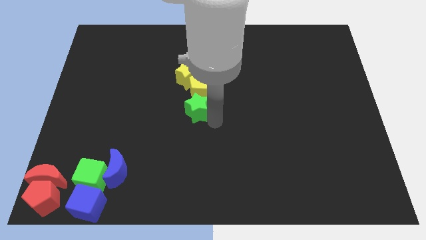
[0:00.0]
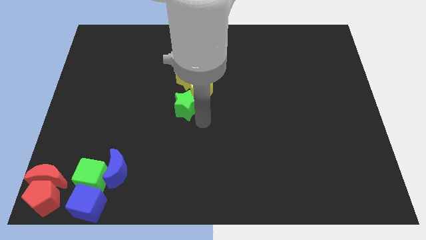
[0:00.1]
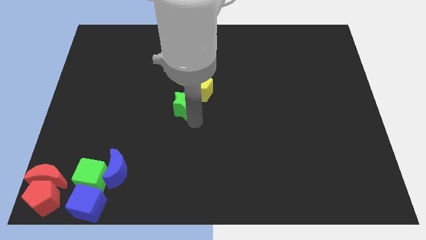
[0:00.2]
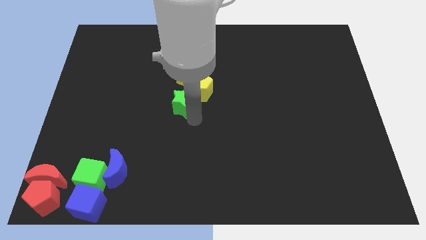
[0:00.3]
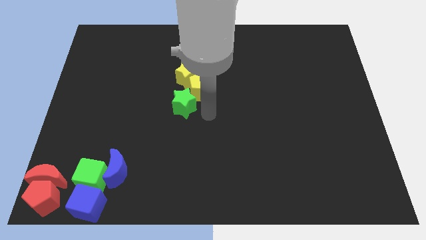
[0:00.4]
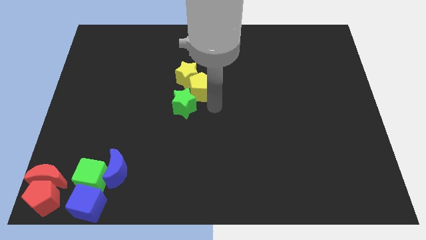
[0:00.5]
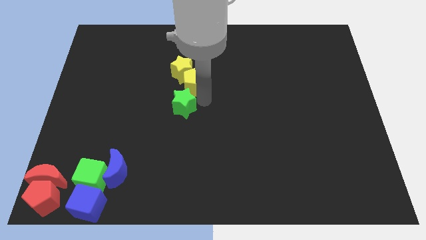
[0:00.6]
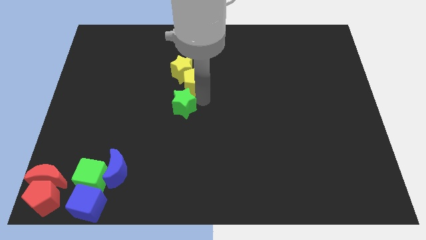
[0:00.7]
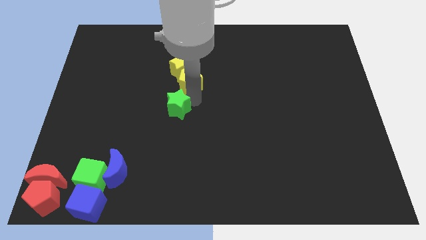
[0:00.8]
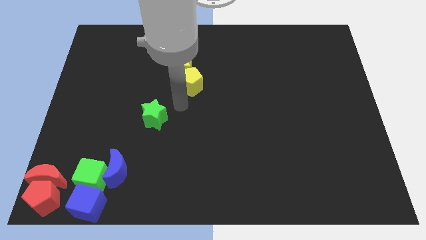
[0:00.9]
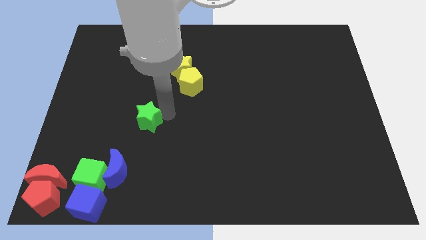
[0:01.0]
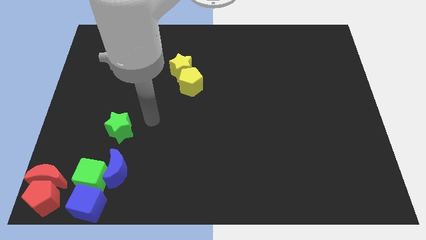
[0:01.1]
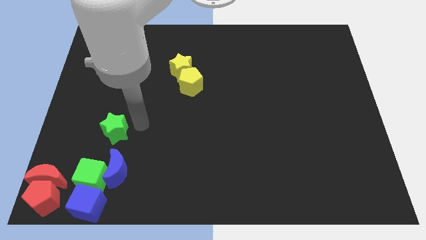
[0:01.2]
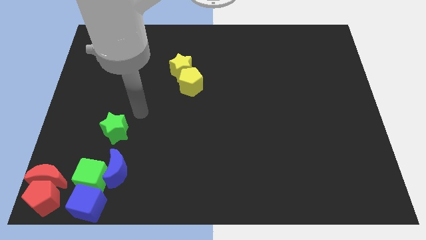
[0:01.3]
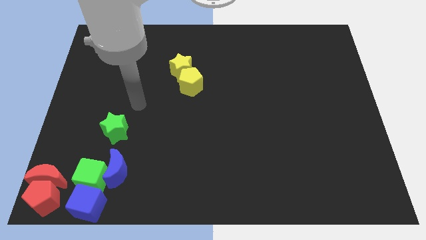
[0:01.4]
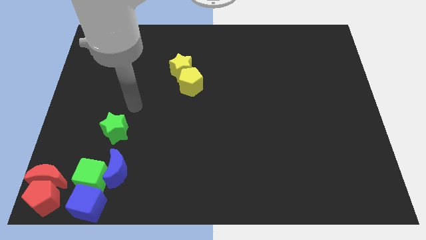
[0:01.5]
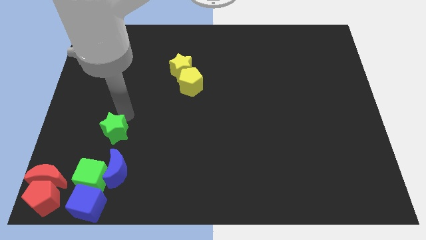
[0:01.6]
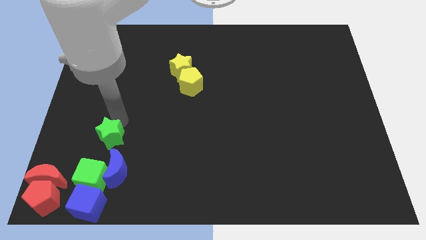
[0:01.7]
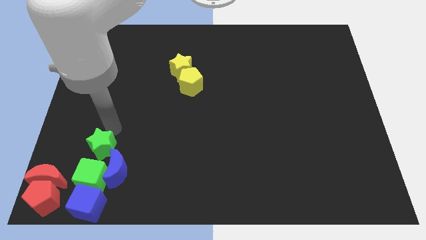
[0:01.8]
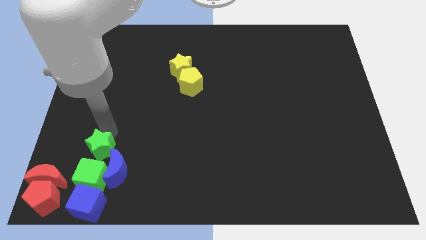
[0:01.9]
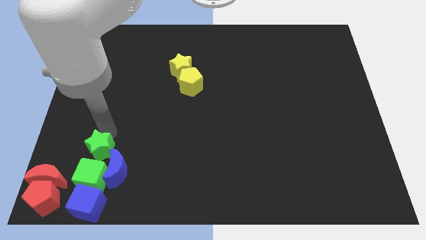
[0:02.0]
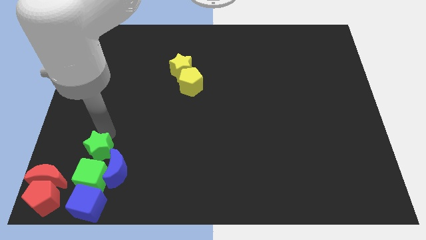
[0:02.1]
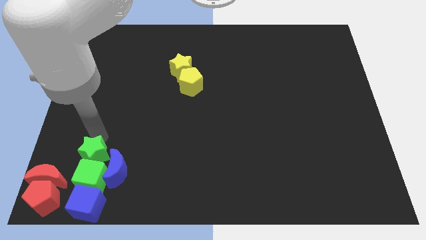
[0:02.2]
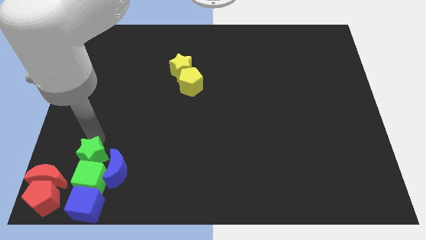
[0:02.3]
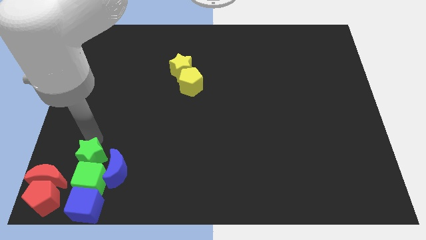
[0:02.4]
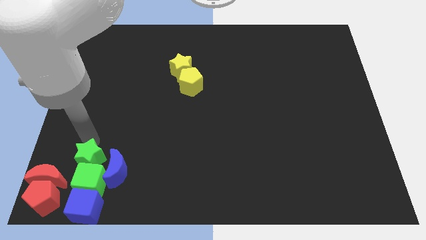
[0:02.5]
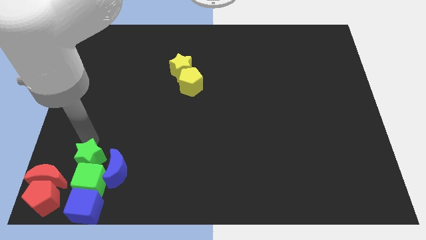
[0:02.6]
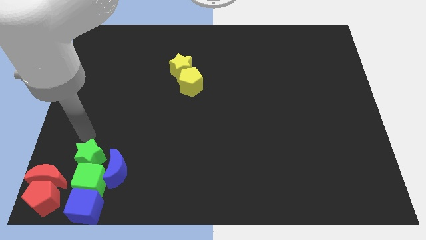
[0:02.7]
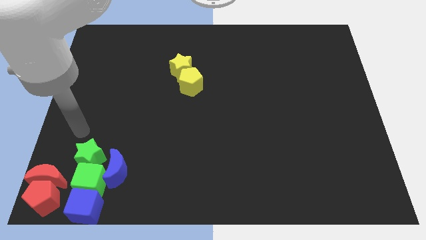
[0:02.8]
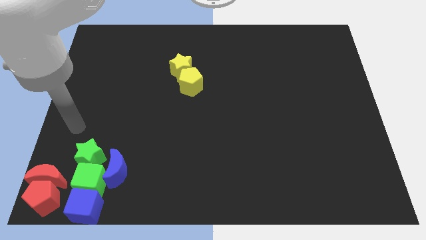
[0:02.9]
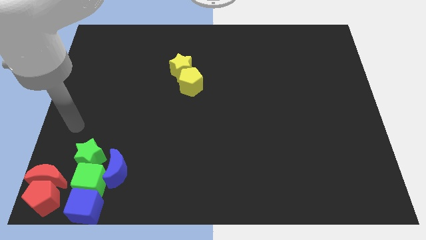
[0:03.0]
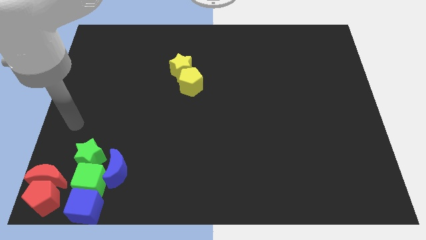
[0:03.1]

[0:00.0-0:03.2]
place the green star on the top of the green cube

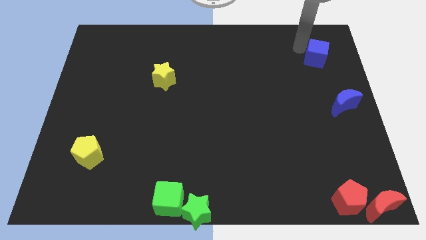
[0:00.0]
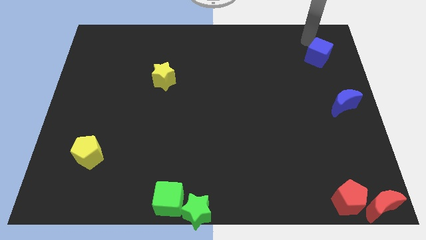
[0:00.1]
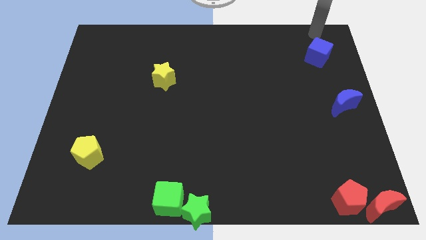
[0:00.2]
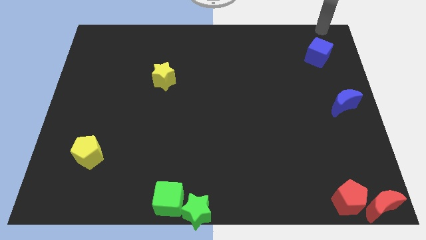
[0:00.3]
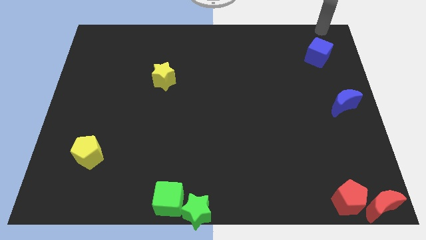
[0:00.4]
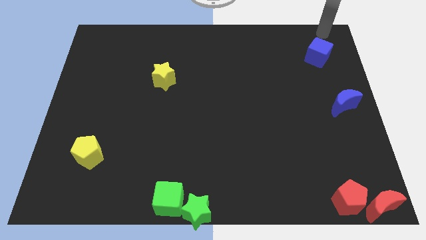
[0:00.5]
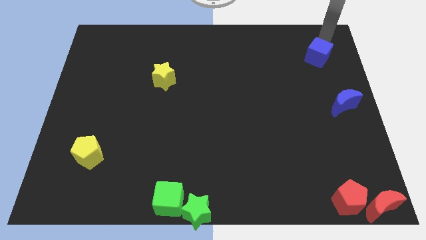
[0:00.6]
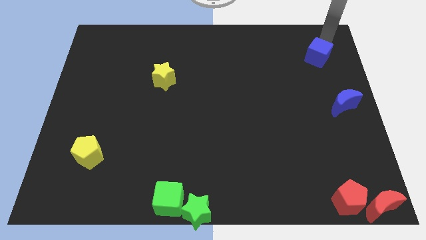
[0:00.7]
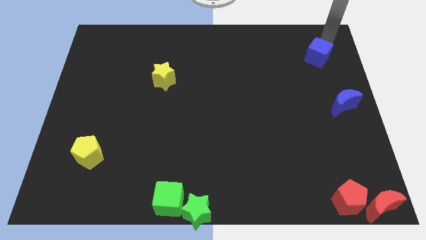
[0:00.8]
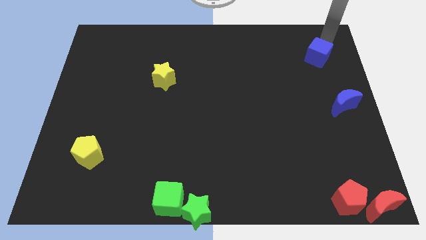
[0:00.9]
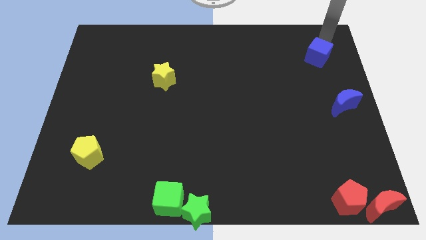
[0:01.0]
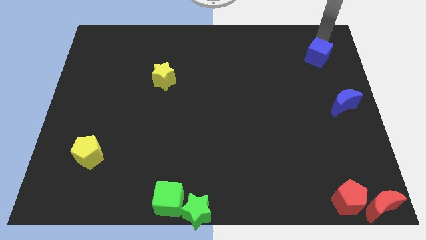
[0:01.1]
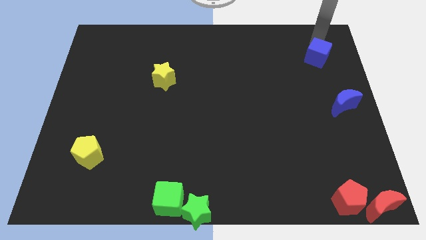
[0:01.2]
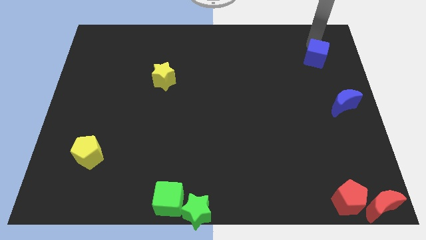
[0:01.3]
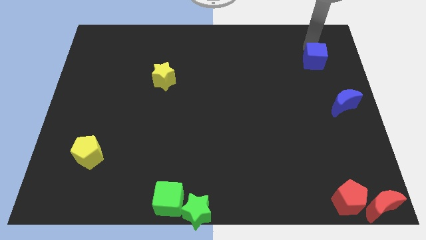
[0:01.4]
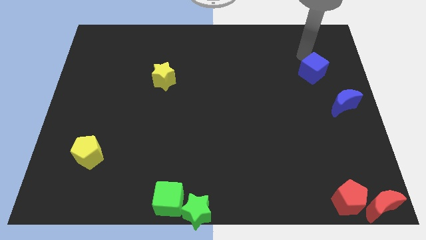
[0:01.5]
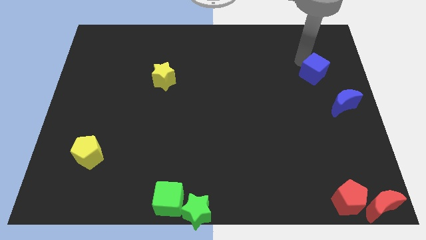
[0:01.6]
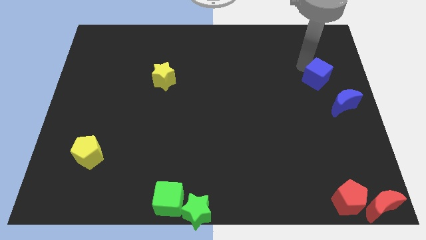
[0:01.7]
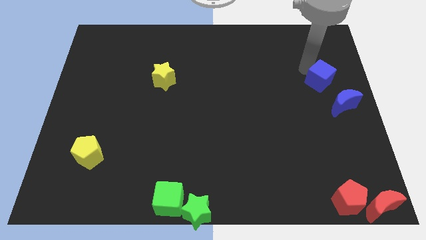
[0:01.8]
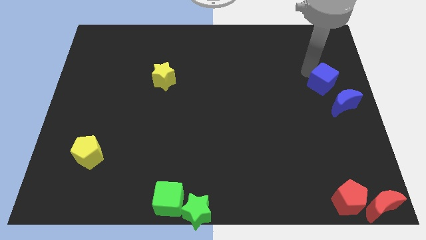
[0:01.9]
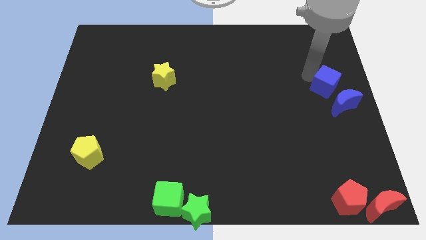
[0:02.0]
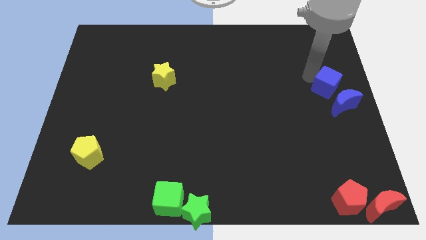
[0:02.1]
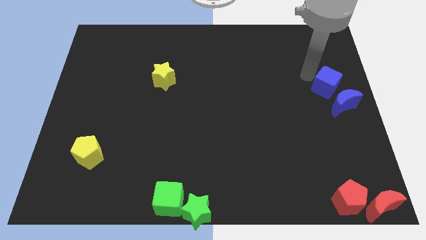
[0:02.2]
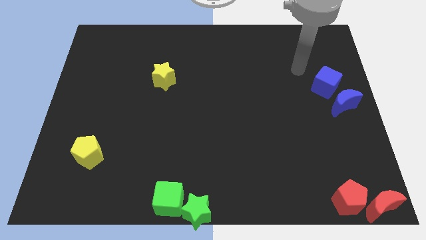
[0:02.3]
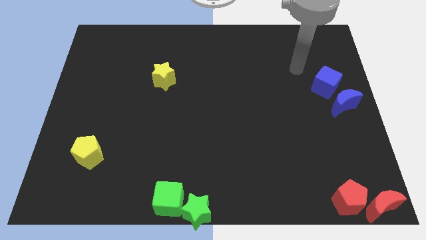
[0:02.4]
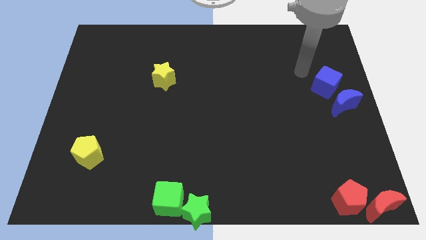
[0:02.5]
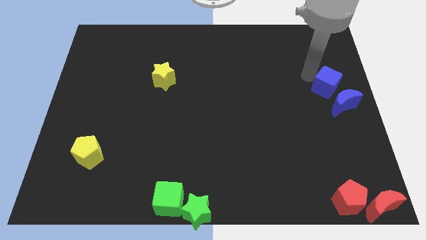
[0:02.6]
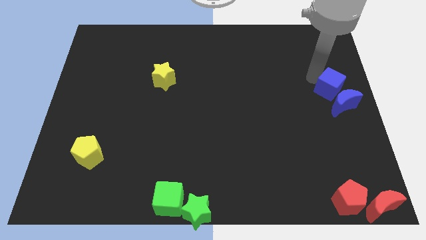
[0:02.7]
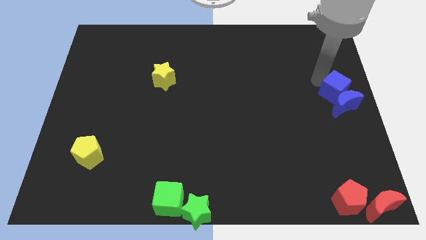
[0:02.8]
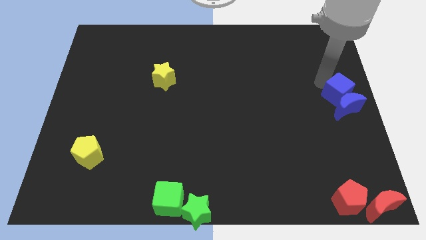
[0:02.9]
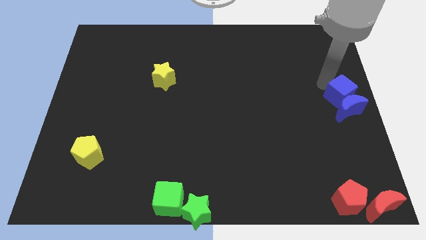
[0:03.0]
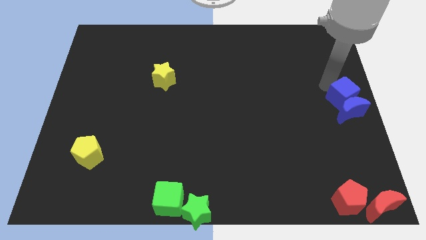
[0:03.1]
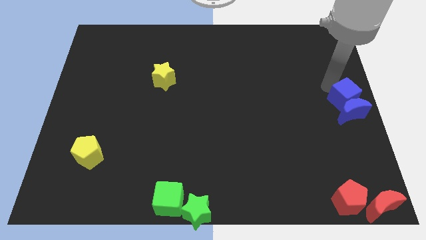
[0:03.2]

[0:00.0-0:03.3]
push the blue cube into the blue moon

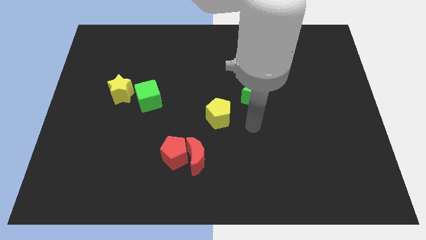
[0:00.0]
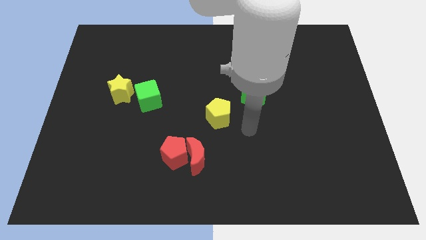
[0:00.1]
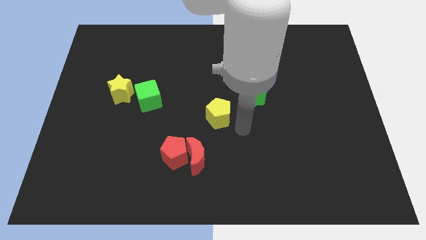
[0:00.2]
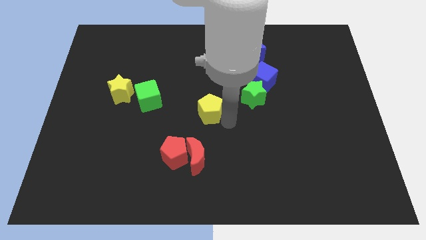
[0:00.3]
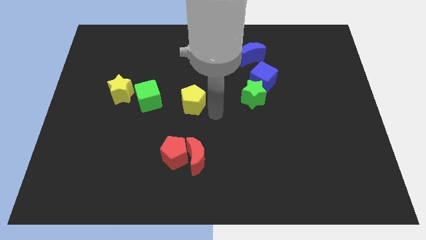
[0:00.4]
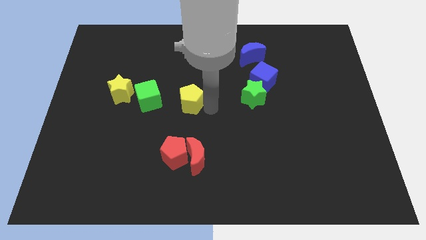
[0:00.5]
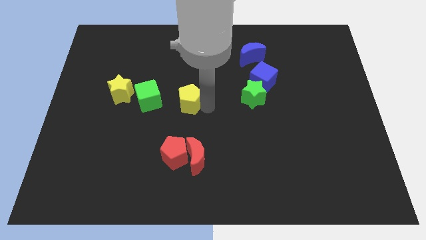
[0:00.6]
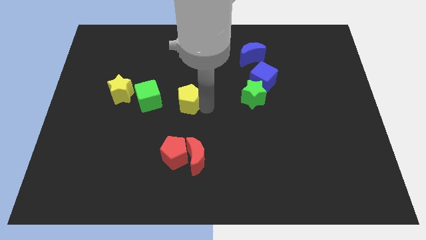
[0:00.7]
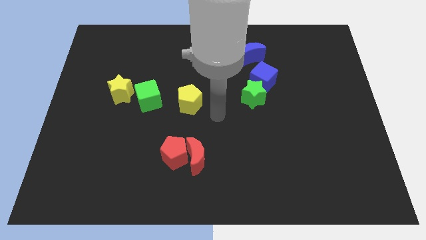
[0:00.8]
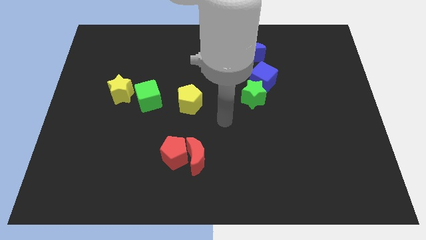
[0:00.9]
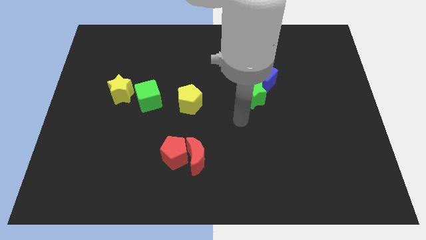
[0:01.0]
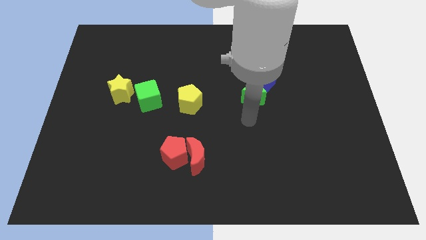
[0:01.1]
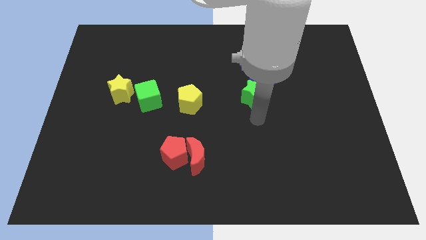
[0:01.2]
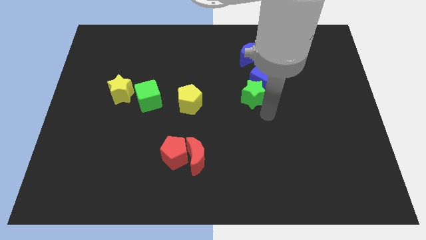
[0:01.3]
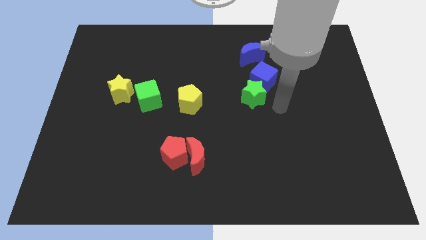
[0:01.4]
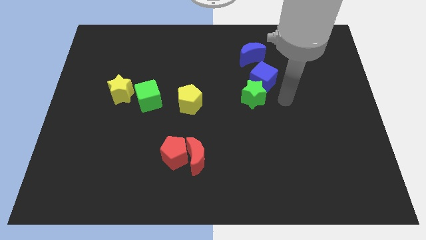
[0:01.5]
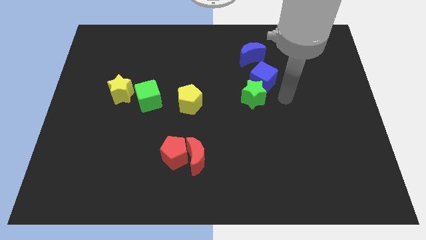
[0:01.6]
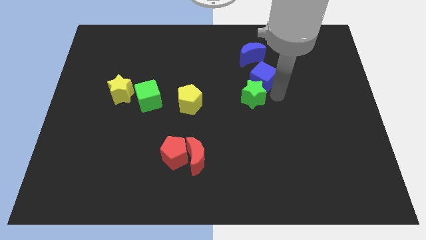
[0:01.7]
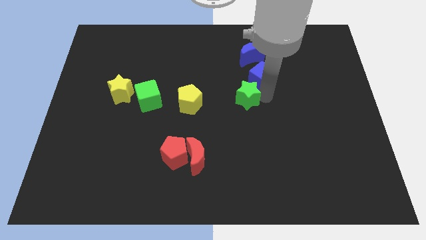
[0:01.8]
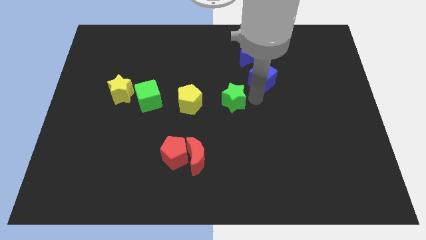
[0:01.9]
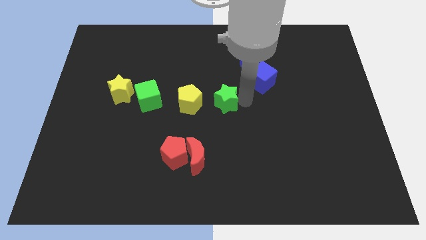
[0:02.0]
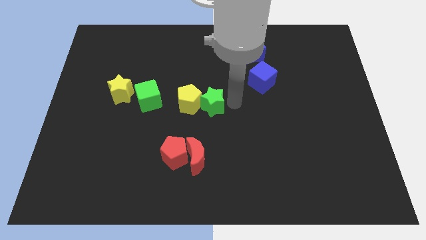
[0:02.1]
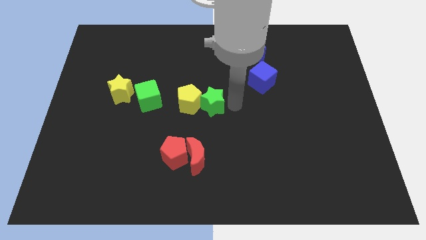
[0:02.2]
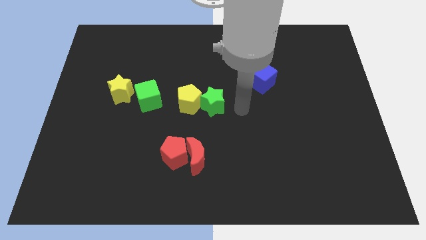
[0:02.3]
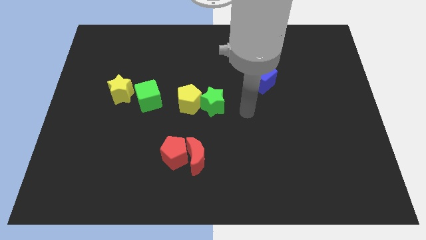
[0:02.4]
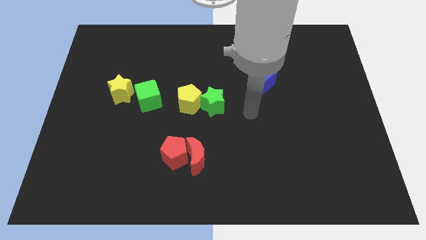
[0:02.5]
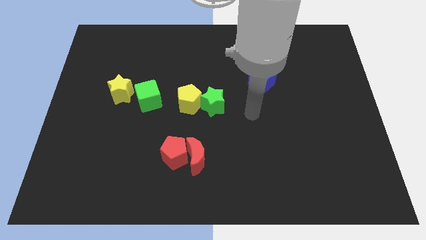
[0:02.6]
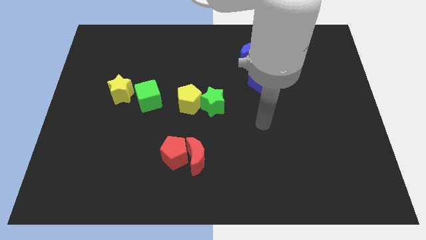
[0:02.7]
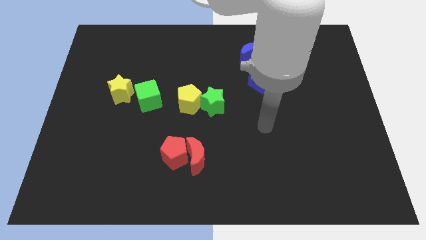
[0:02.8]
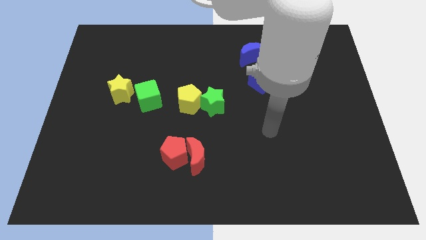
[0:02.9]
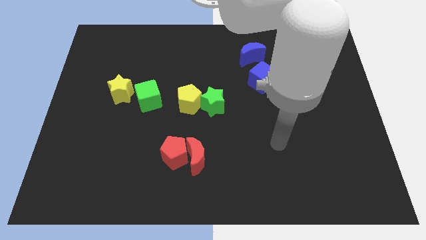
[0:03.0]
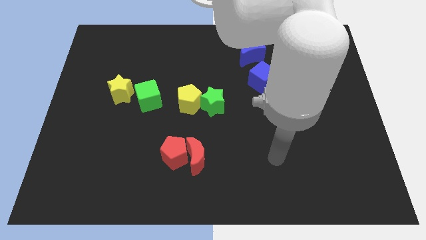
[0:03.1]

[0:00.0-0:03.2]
place the yellow pentagon and green star at the center of the board
